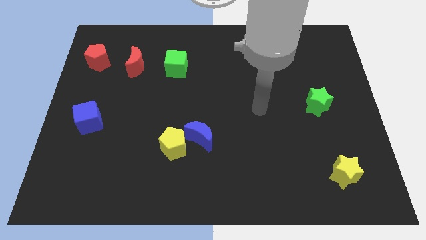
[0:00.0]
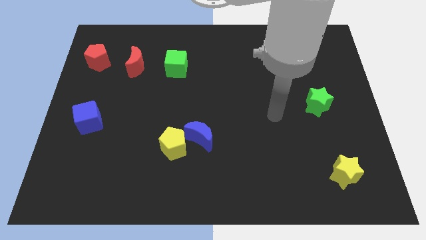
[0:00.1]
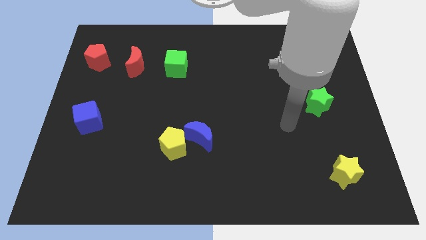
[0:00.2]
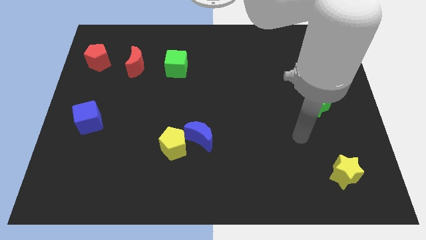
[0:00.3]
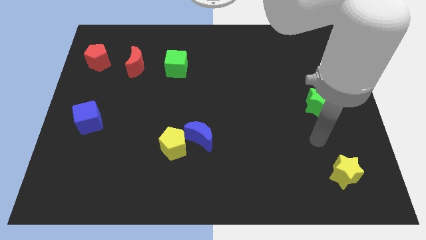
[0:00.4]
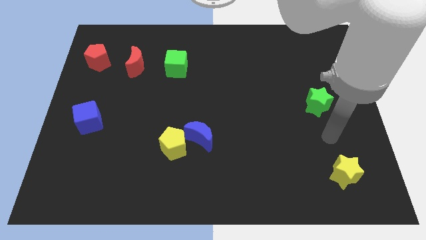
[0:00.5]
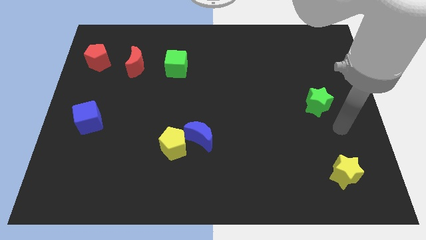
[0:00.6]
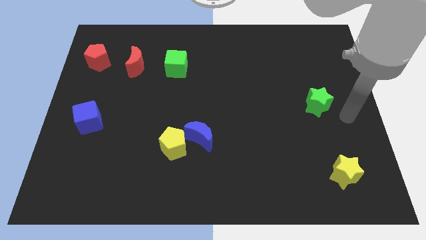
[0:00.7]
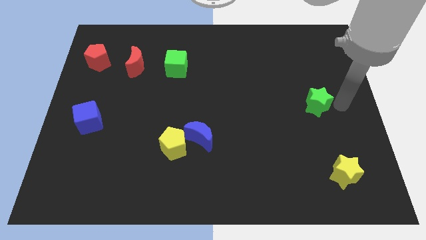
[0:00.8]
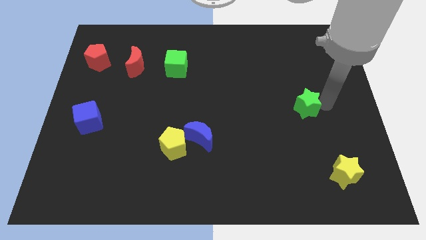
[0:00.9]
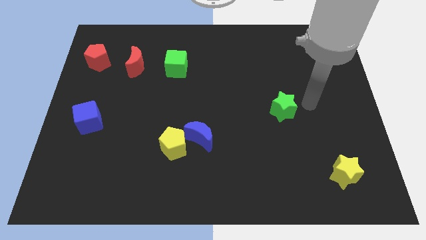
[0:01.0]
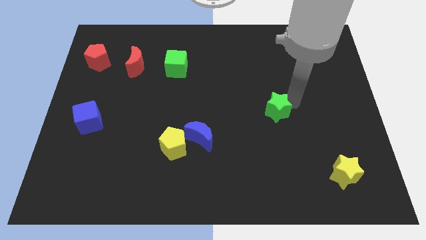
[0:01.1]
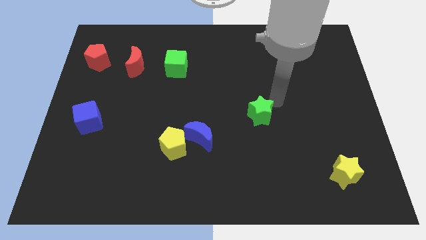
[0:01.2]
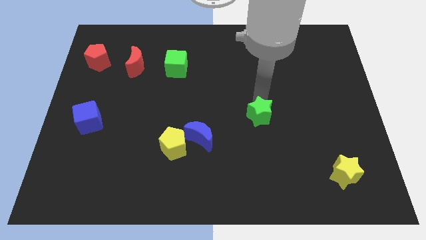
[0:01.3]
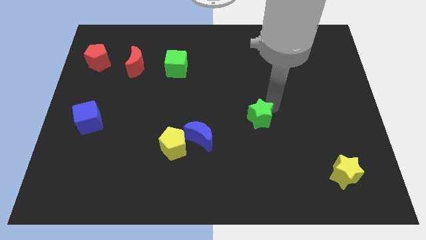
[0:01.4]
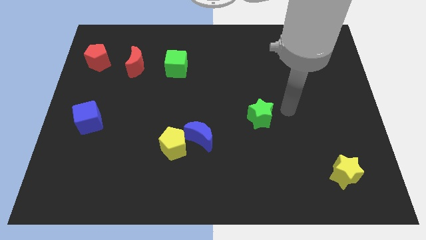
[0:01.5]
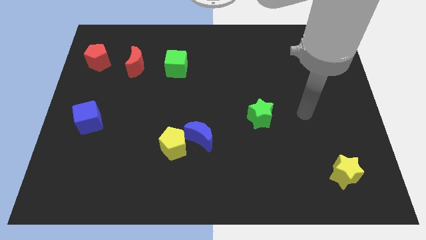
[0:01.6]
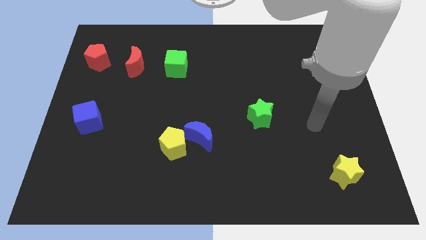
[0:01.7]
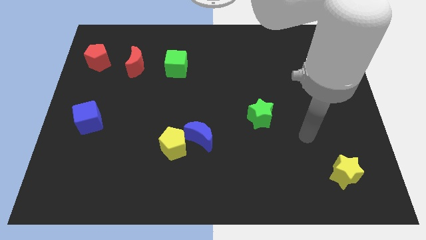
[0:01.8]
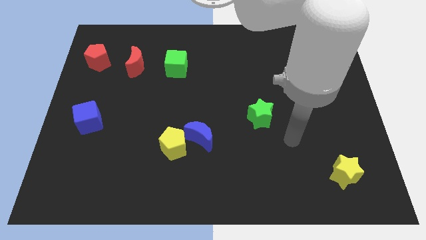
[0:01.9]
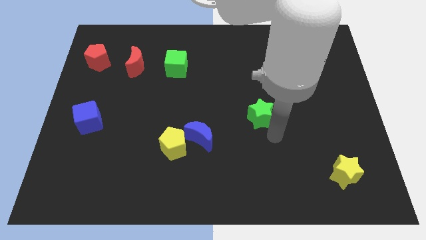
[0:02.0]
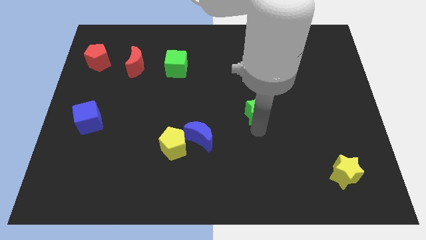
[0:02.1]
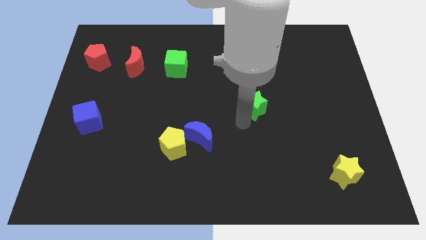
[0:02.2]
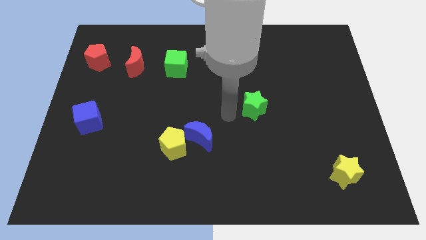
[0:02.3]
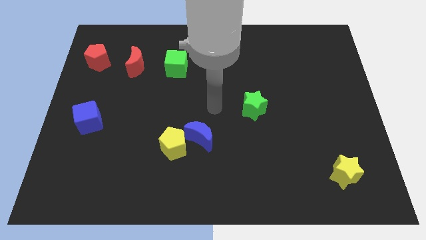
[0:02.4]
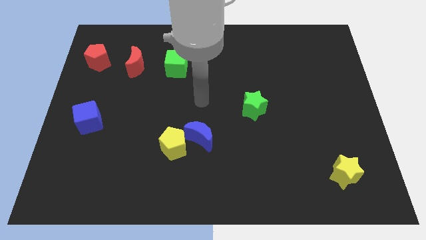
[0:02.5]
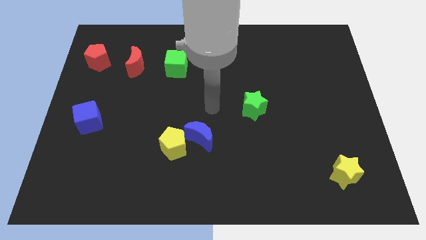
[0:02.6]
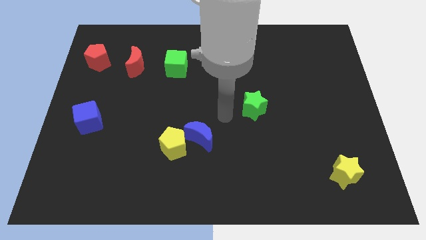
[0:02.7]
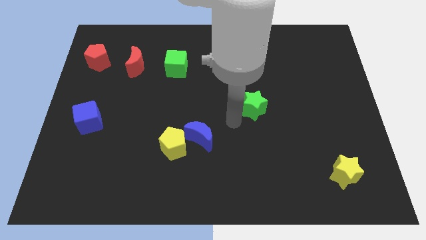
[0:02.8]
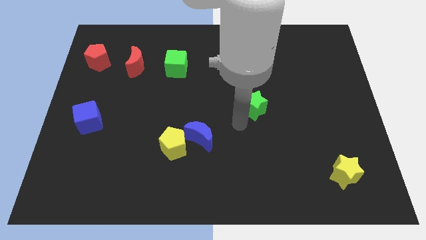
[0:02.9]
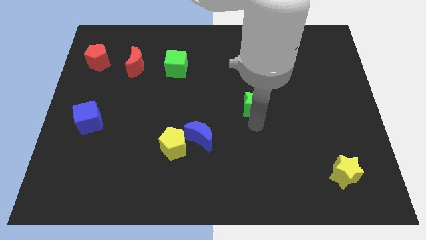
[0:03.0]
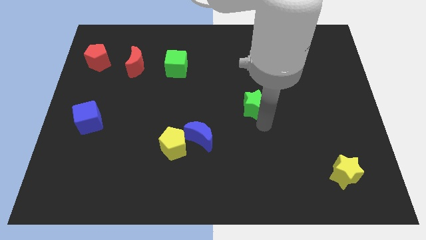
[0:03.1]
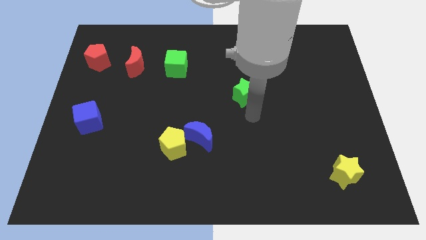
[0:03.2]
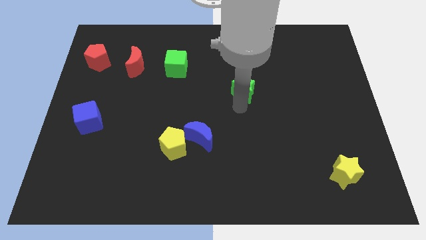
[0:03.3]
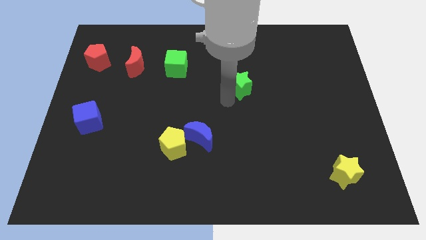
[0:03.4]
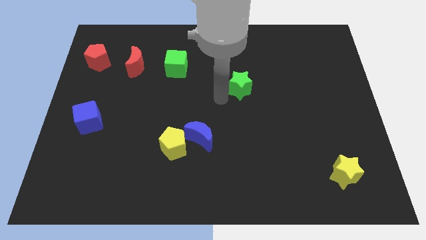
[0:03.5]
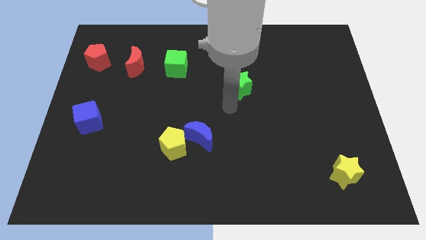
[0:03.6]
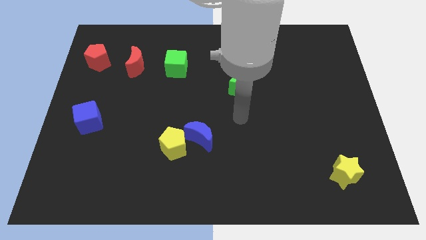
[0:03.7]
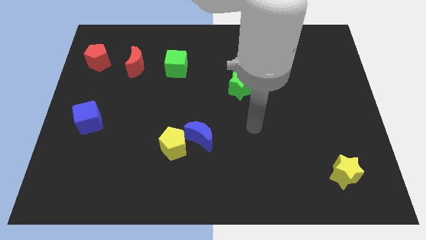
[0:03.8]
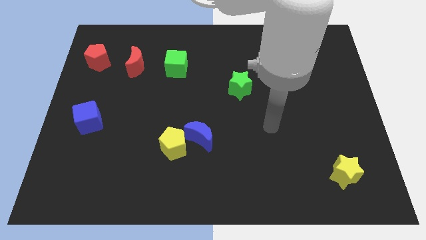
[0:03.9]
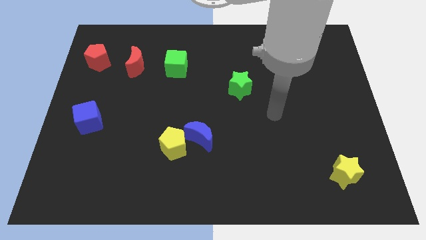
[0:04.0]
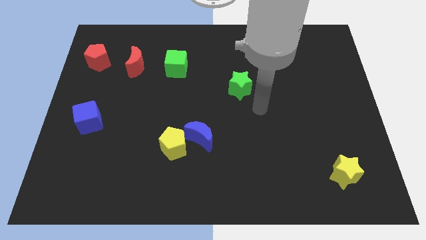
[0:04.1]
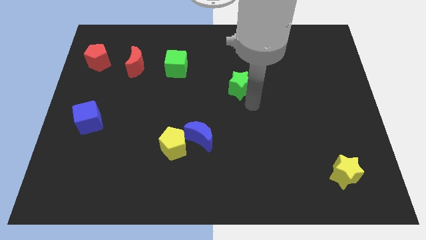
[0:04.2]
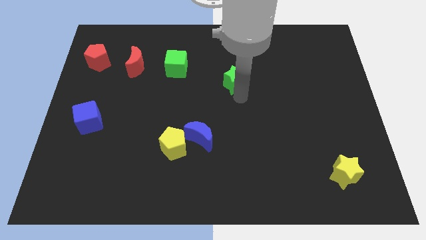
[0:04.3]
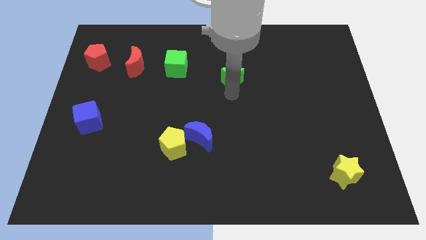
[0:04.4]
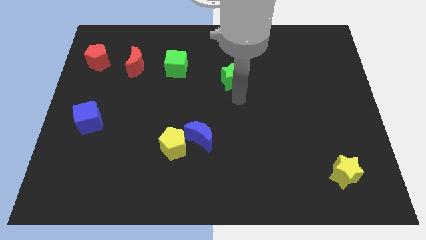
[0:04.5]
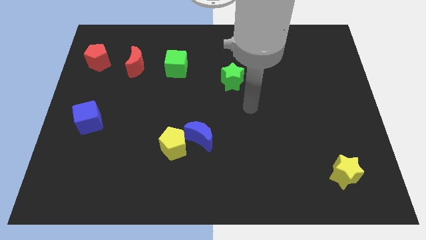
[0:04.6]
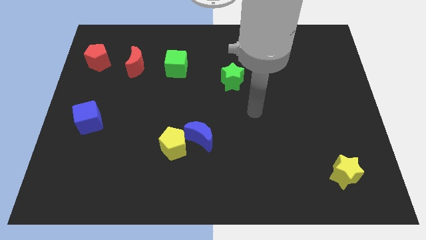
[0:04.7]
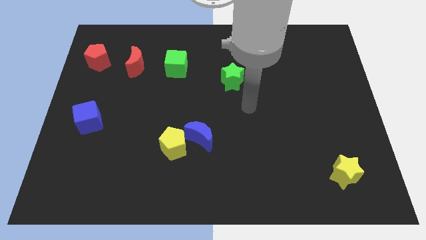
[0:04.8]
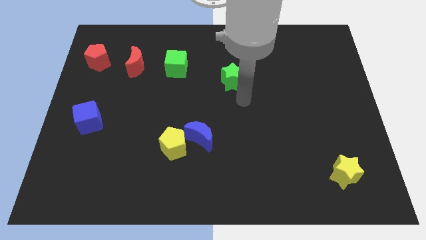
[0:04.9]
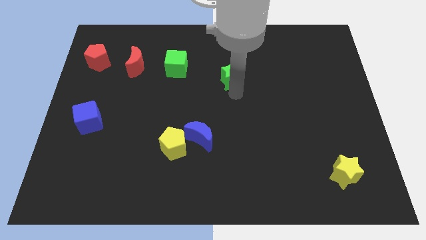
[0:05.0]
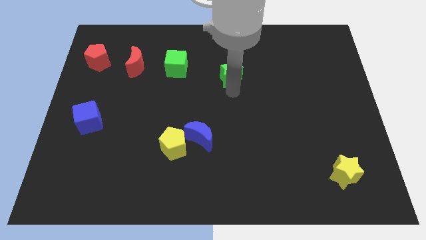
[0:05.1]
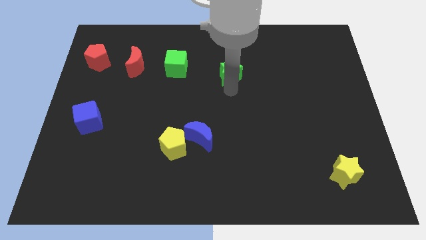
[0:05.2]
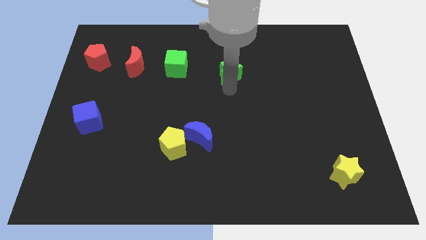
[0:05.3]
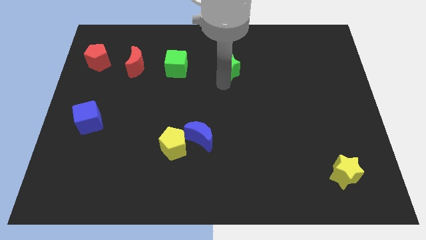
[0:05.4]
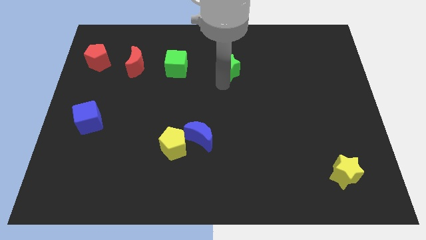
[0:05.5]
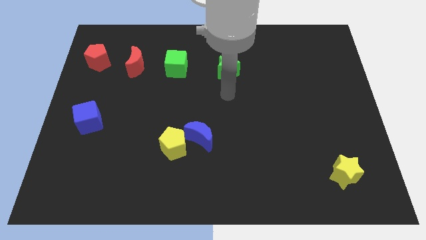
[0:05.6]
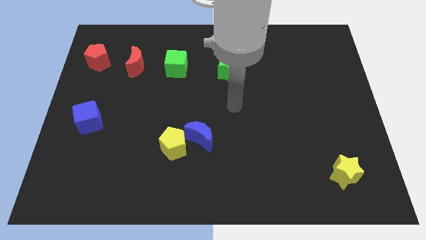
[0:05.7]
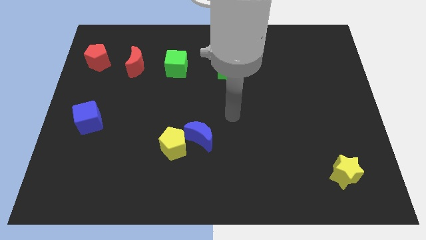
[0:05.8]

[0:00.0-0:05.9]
place green star adjacent to green cube

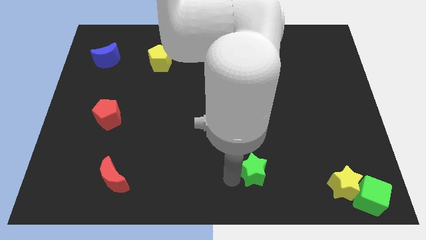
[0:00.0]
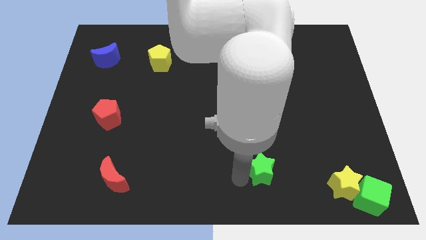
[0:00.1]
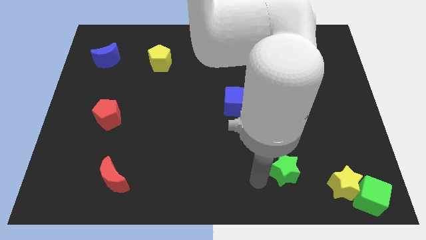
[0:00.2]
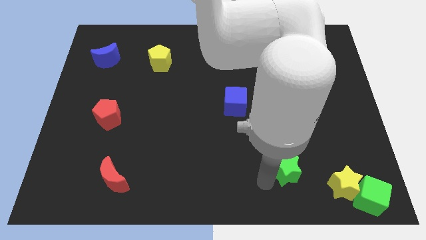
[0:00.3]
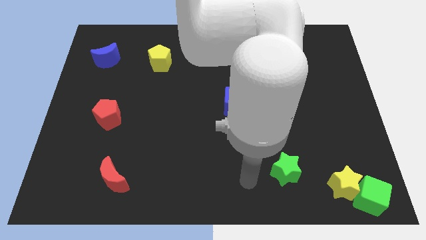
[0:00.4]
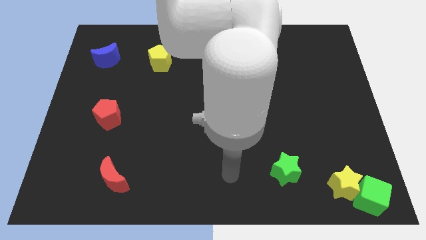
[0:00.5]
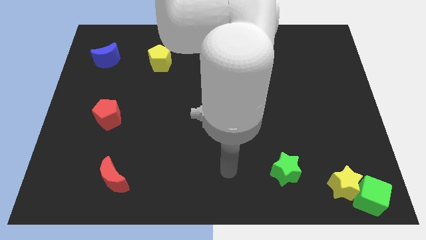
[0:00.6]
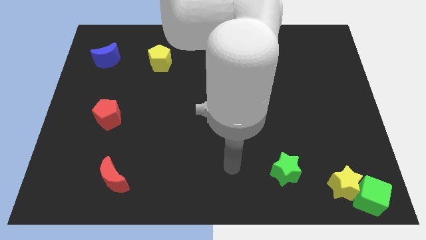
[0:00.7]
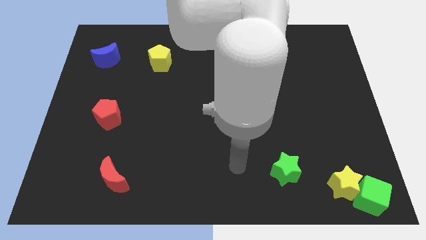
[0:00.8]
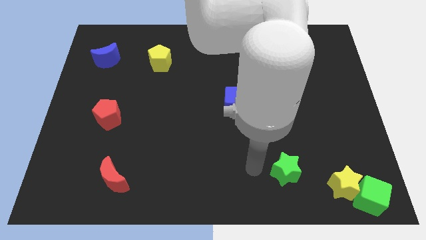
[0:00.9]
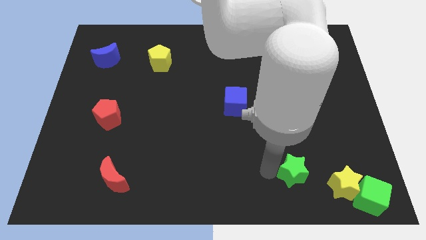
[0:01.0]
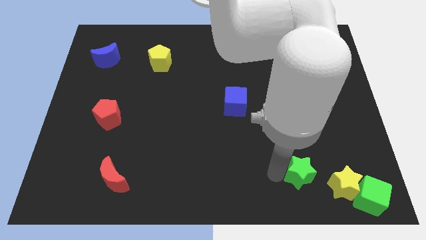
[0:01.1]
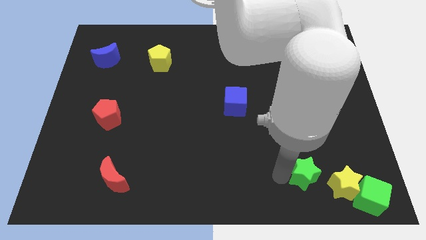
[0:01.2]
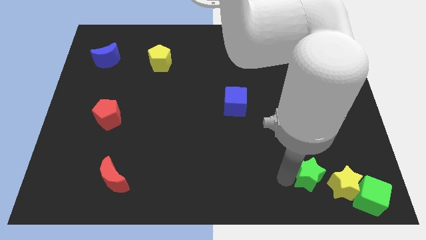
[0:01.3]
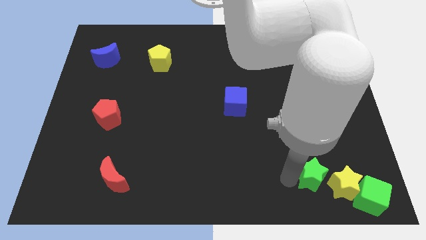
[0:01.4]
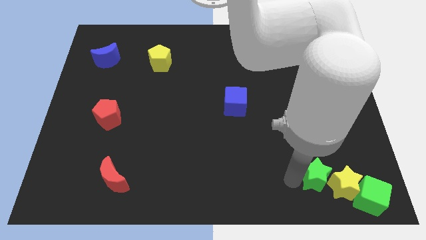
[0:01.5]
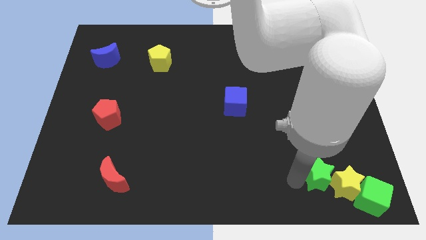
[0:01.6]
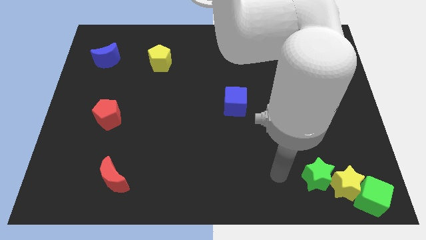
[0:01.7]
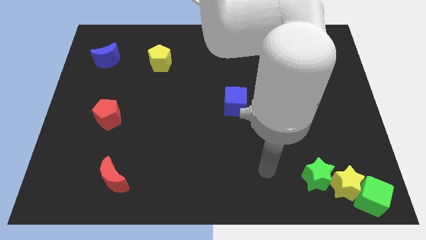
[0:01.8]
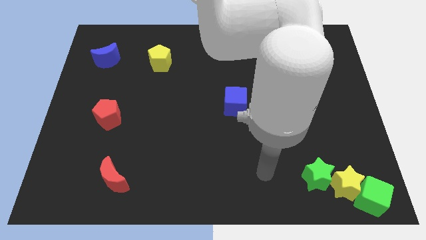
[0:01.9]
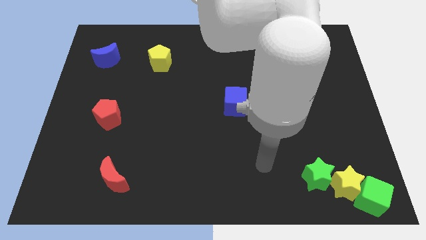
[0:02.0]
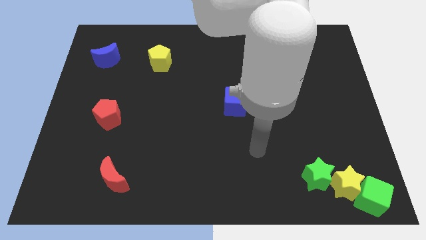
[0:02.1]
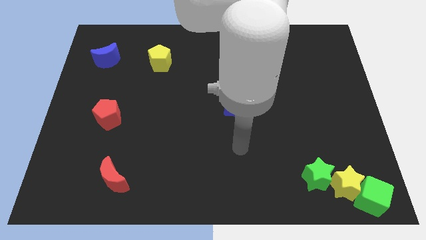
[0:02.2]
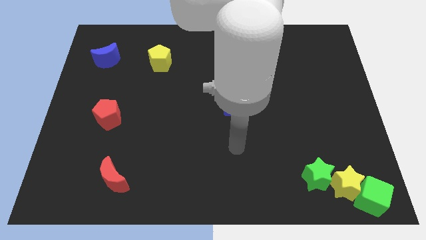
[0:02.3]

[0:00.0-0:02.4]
push green star into yellow star at the bottom right corner of the board

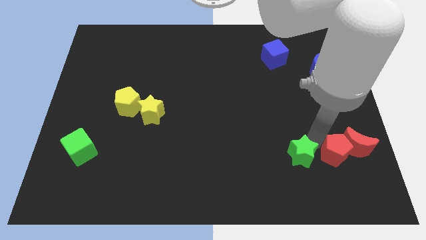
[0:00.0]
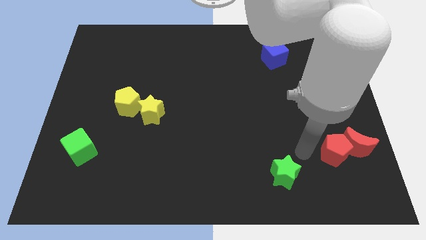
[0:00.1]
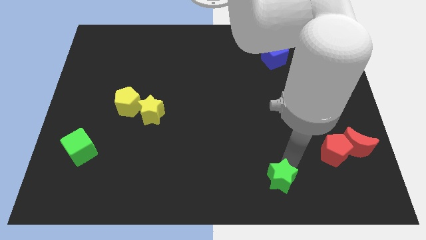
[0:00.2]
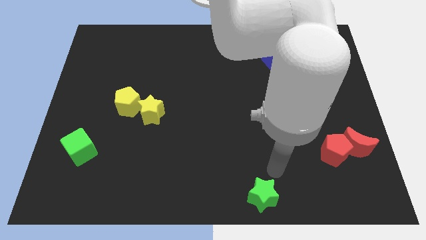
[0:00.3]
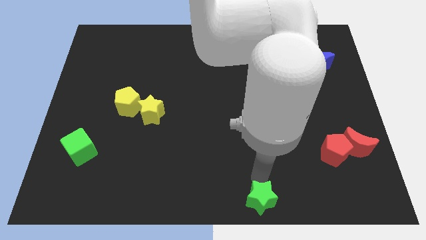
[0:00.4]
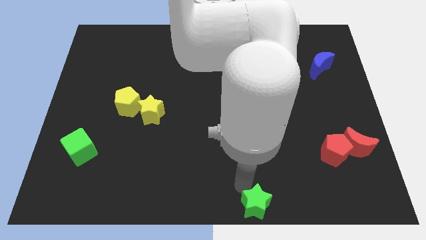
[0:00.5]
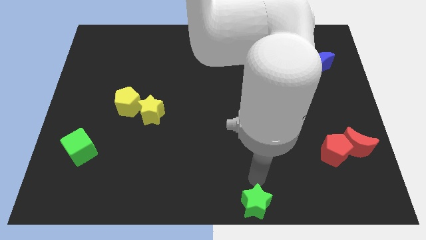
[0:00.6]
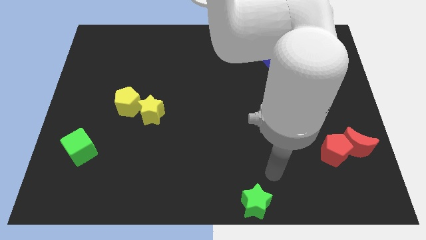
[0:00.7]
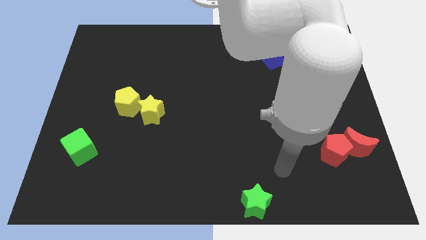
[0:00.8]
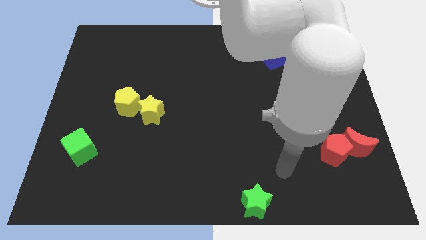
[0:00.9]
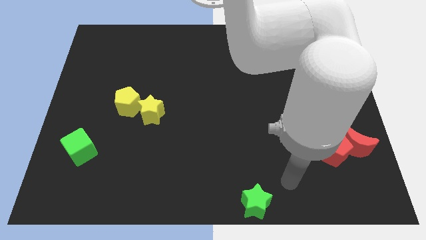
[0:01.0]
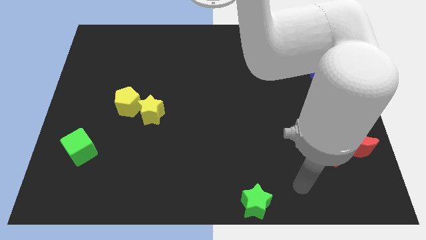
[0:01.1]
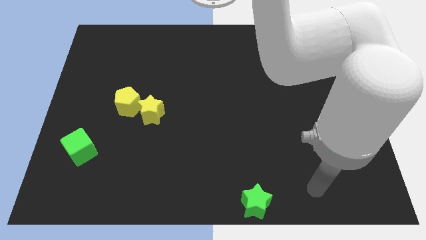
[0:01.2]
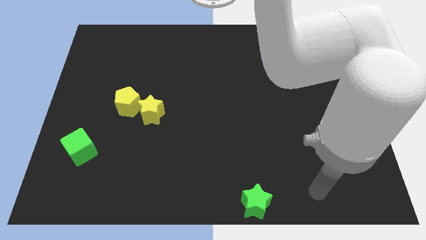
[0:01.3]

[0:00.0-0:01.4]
move green star to the bottom of the board
